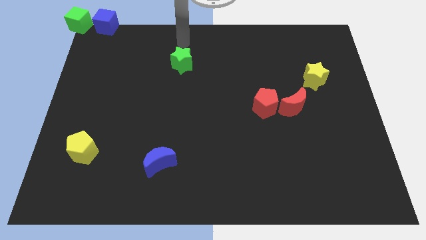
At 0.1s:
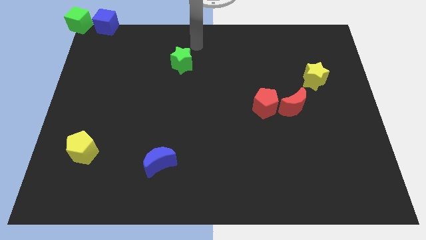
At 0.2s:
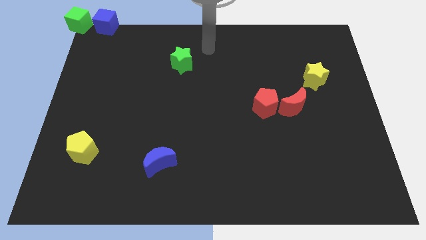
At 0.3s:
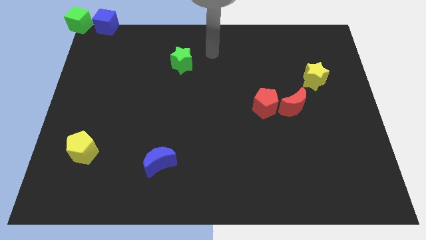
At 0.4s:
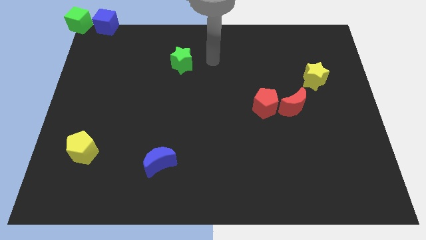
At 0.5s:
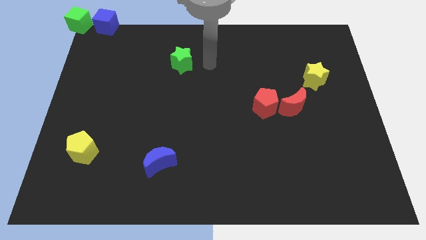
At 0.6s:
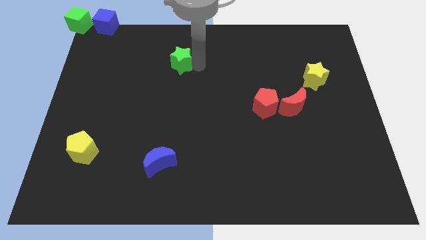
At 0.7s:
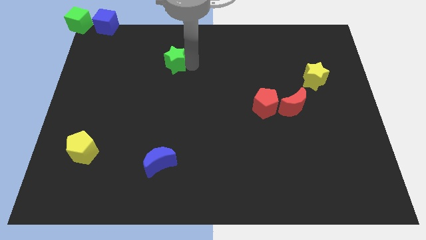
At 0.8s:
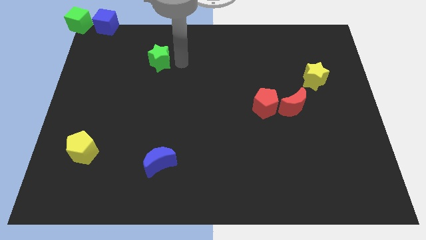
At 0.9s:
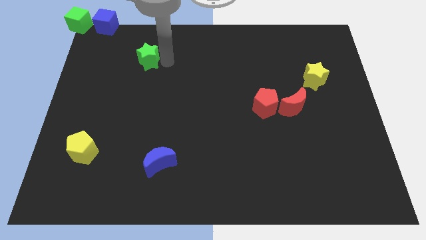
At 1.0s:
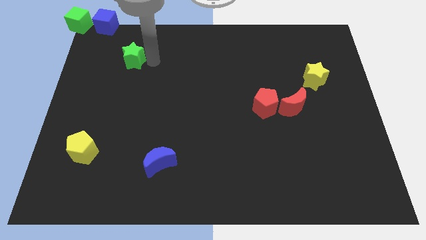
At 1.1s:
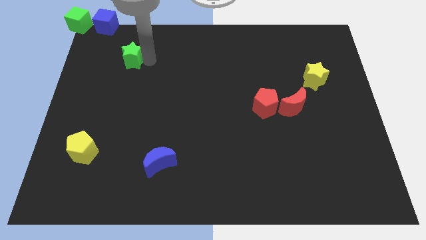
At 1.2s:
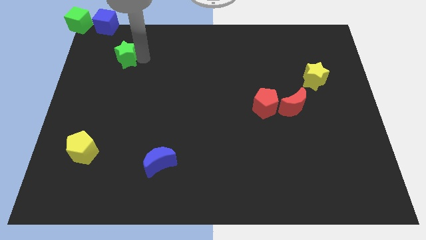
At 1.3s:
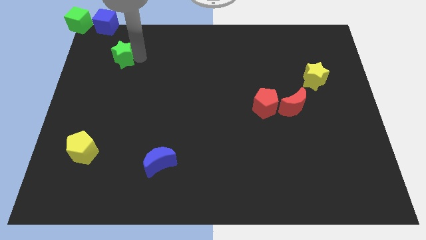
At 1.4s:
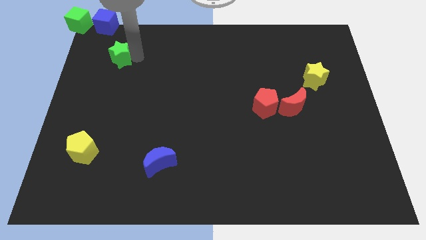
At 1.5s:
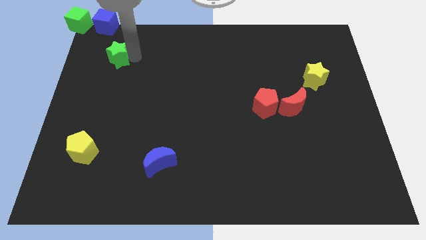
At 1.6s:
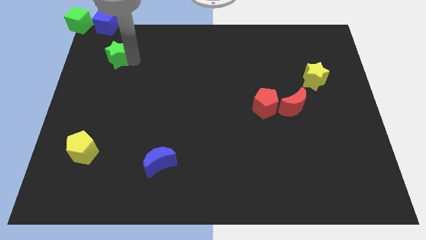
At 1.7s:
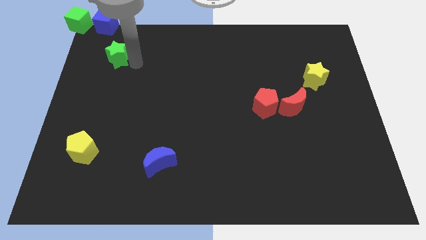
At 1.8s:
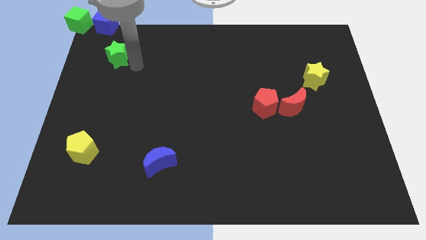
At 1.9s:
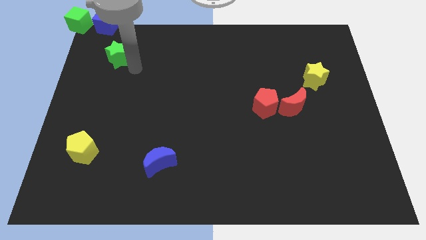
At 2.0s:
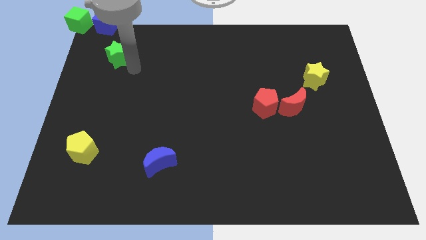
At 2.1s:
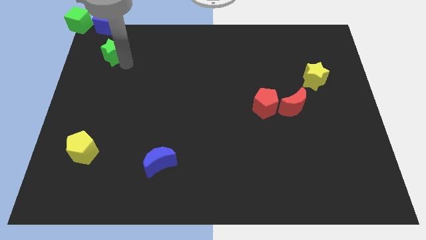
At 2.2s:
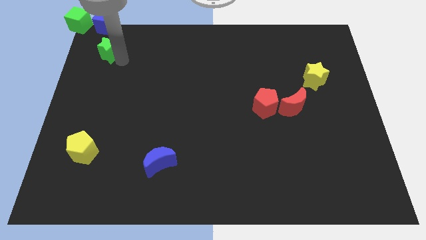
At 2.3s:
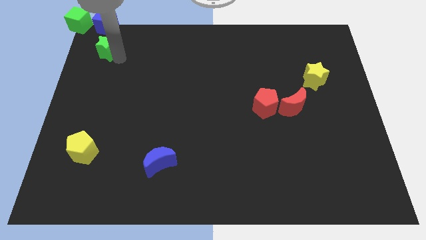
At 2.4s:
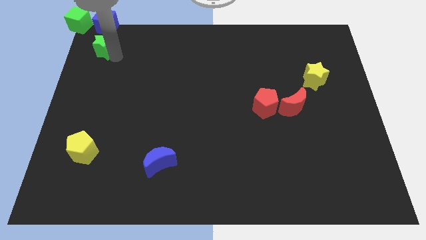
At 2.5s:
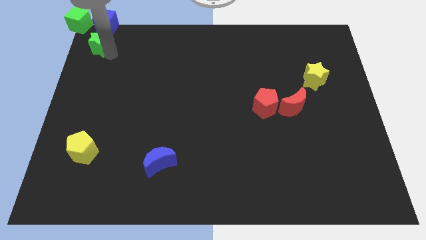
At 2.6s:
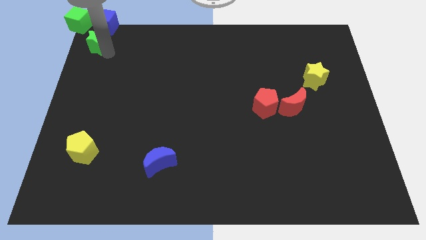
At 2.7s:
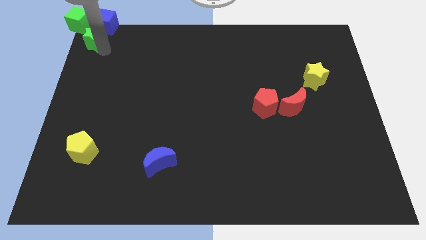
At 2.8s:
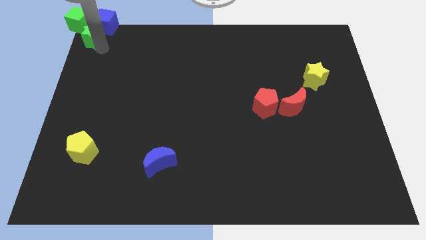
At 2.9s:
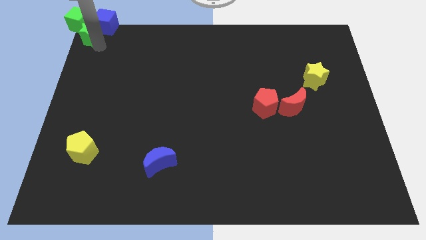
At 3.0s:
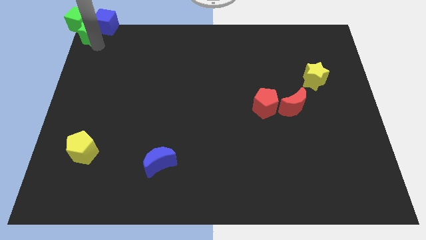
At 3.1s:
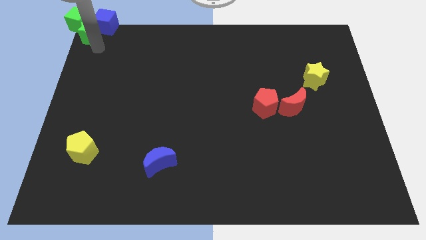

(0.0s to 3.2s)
push the green star to the top left corner of the board

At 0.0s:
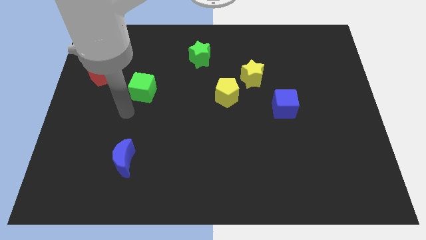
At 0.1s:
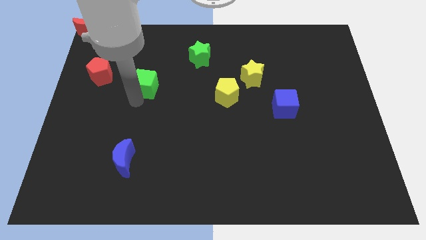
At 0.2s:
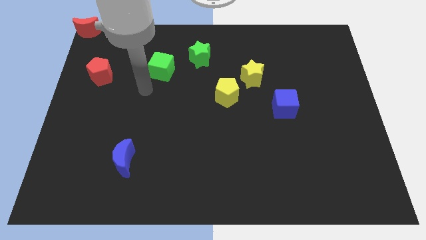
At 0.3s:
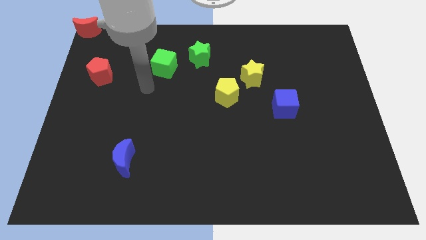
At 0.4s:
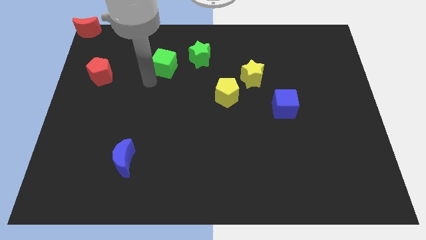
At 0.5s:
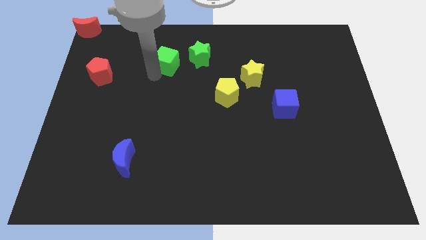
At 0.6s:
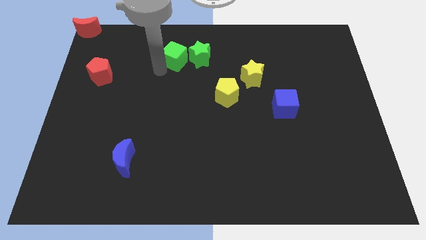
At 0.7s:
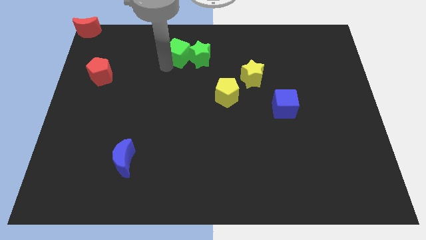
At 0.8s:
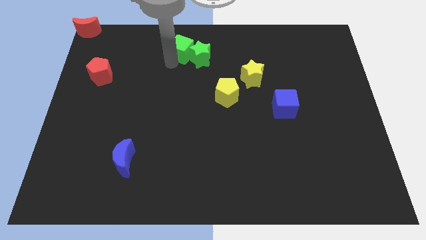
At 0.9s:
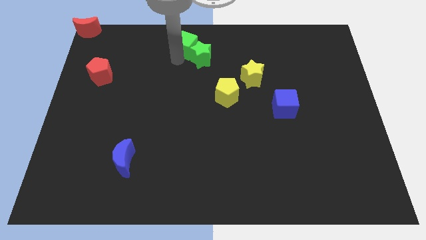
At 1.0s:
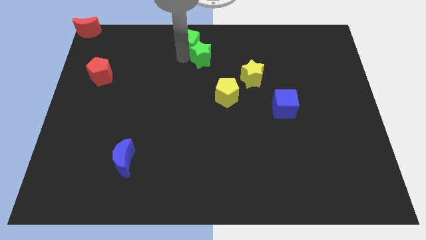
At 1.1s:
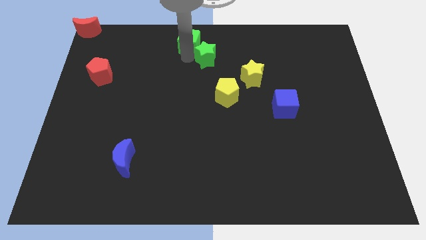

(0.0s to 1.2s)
place green cube left to green star

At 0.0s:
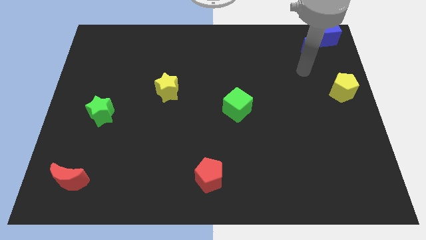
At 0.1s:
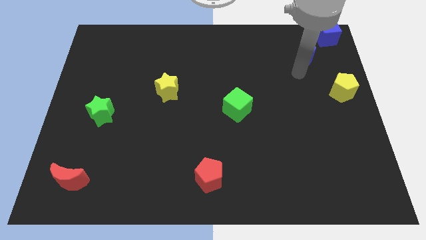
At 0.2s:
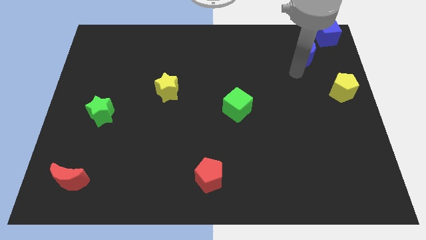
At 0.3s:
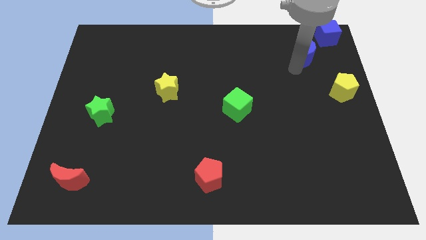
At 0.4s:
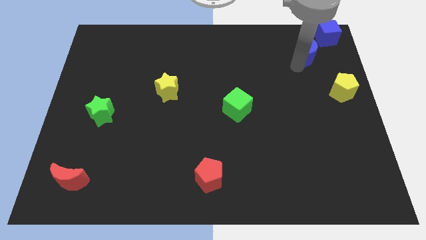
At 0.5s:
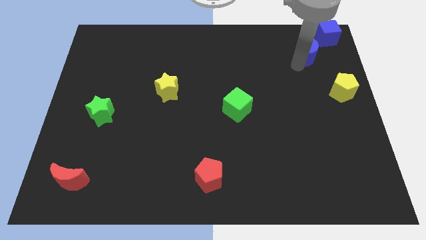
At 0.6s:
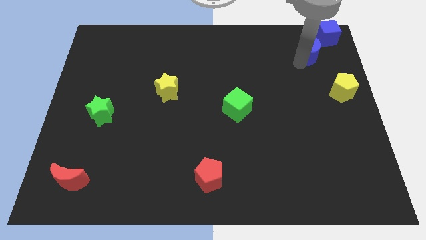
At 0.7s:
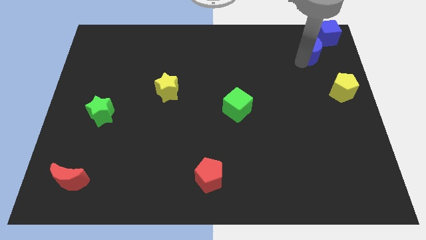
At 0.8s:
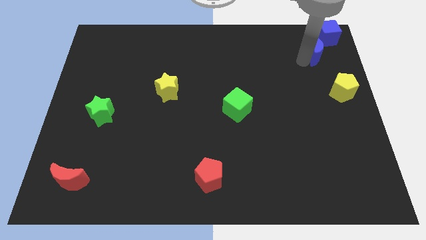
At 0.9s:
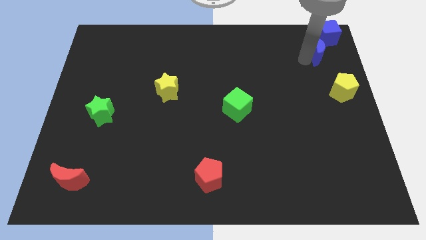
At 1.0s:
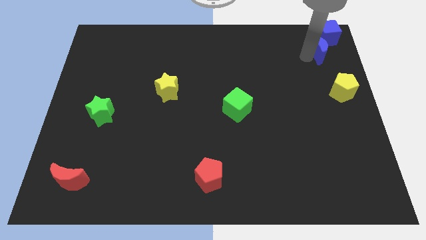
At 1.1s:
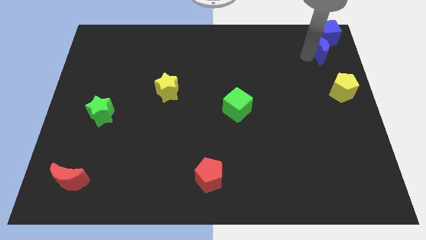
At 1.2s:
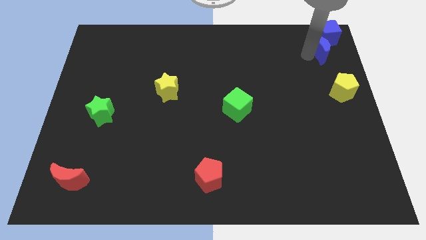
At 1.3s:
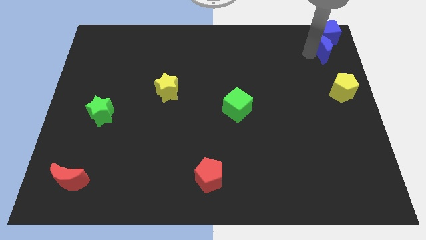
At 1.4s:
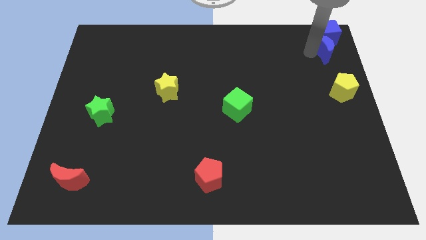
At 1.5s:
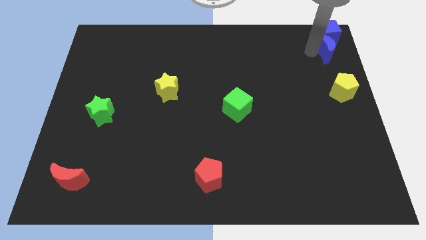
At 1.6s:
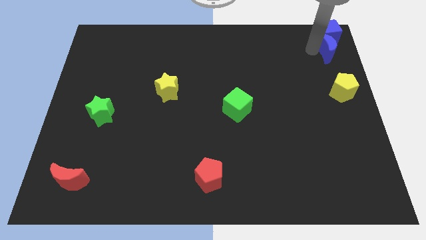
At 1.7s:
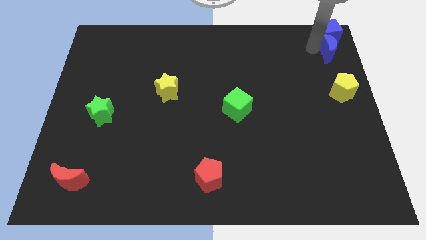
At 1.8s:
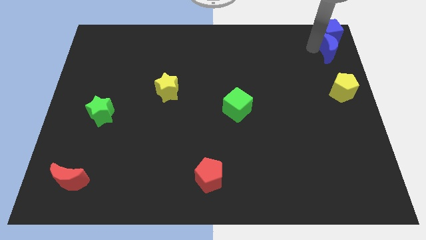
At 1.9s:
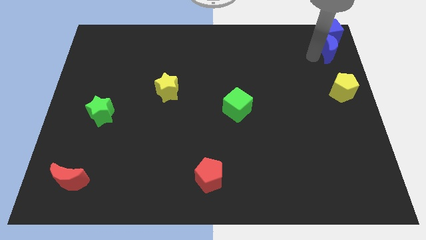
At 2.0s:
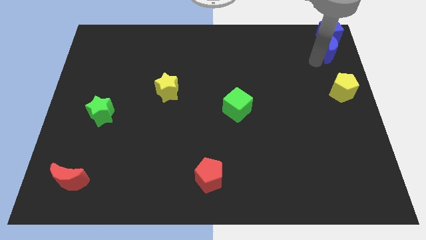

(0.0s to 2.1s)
place blue moon to the bottom of blue cube

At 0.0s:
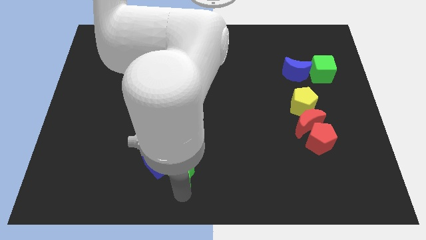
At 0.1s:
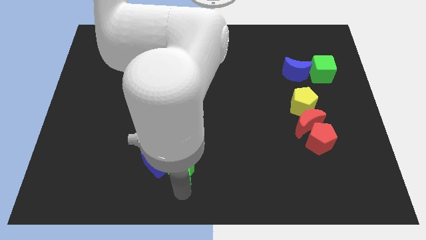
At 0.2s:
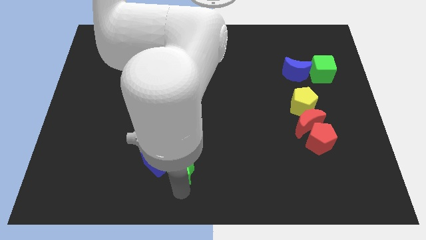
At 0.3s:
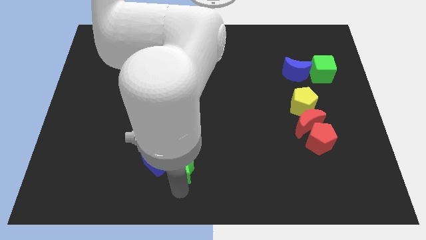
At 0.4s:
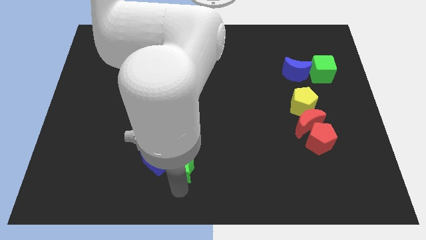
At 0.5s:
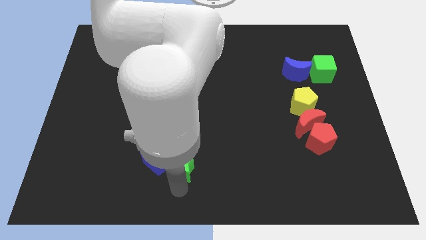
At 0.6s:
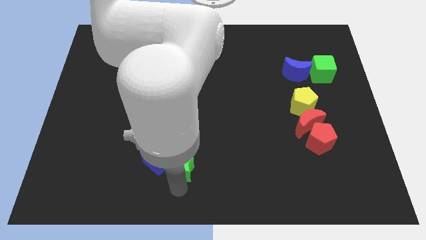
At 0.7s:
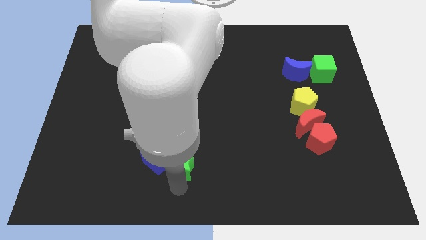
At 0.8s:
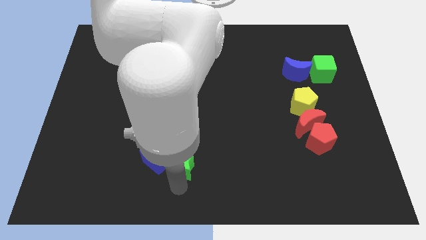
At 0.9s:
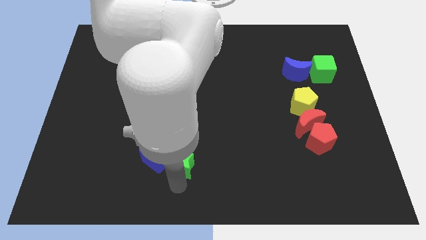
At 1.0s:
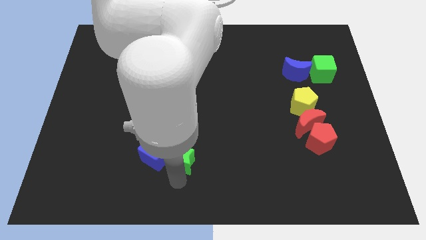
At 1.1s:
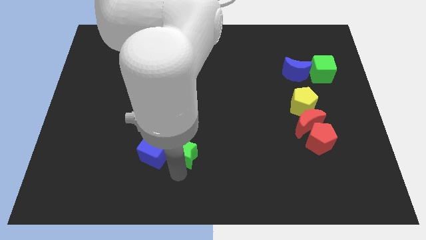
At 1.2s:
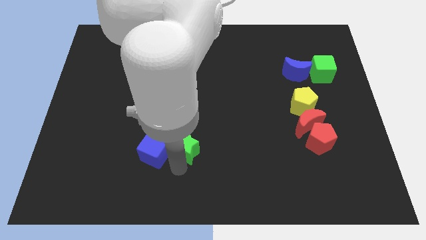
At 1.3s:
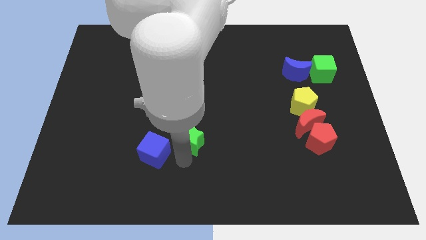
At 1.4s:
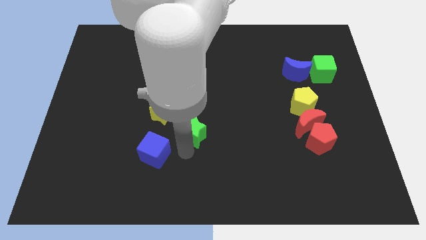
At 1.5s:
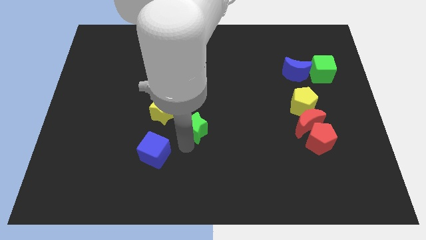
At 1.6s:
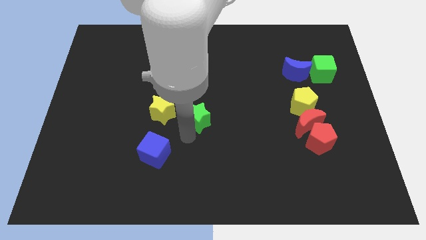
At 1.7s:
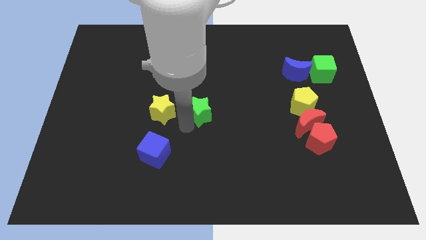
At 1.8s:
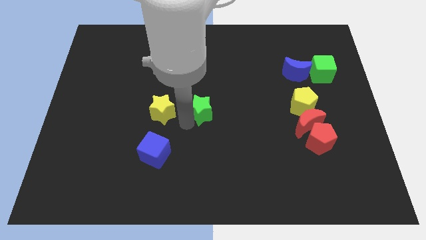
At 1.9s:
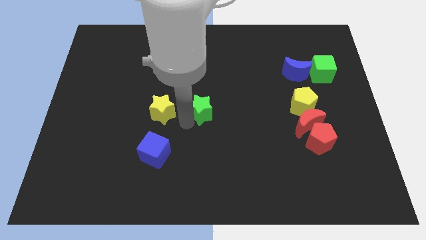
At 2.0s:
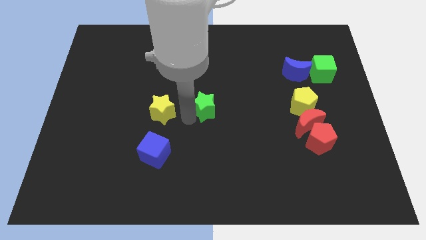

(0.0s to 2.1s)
separate the green star from blue cube

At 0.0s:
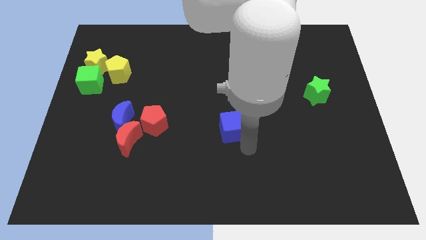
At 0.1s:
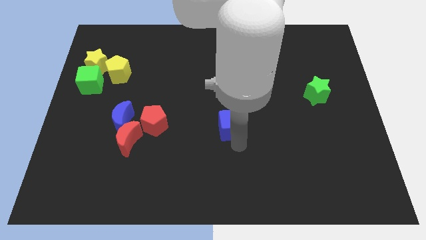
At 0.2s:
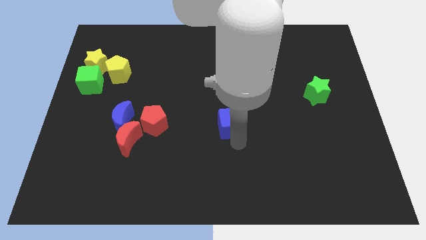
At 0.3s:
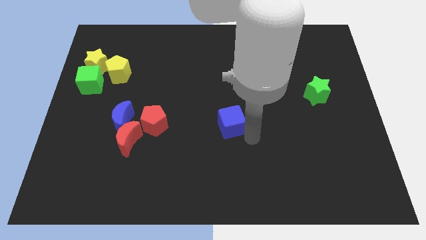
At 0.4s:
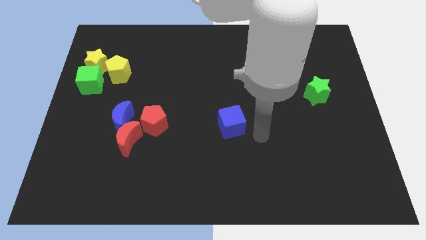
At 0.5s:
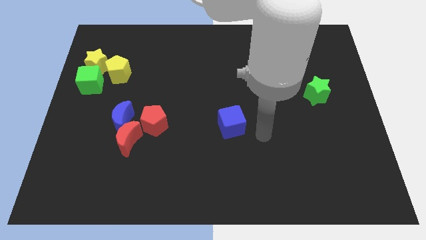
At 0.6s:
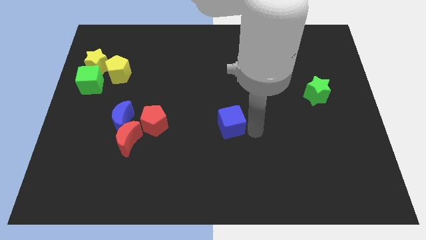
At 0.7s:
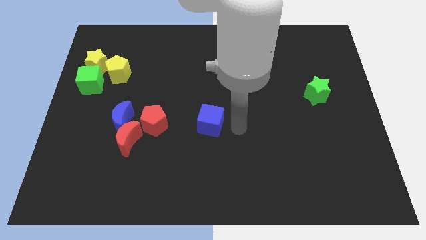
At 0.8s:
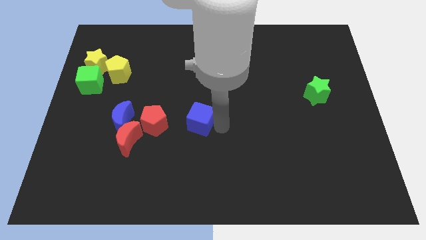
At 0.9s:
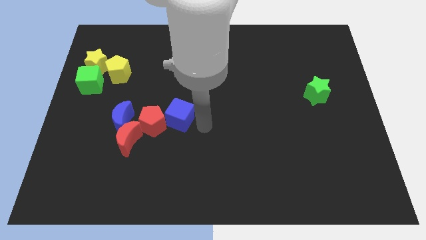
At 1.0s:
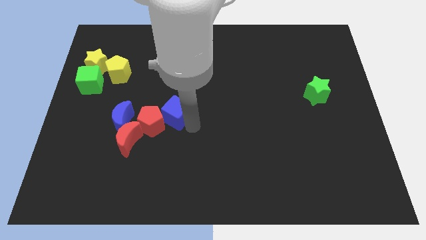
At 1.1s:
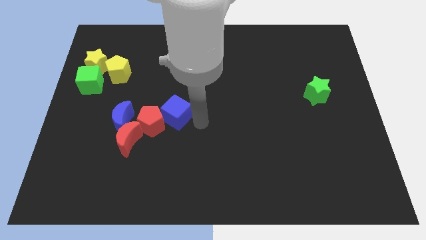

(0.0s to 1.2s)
push blue cube towards red pentagon
